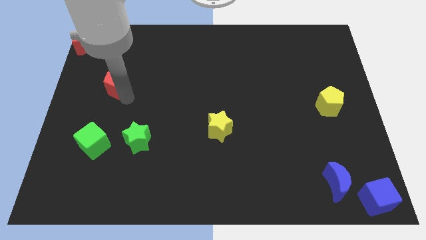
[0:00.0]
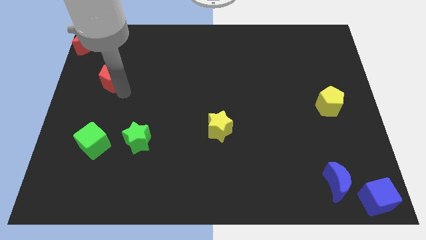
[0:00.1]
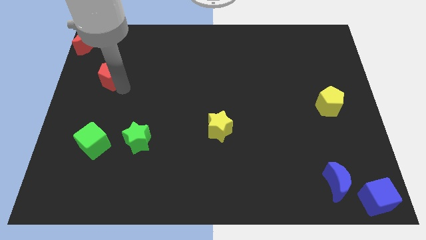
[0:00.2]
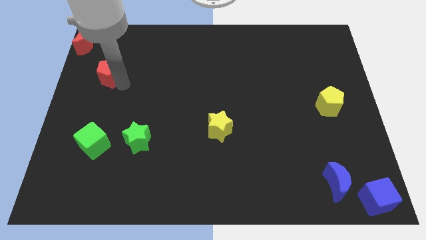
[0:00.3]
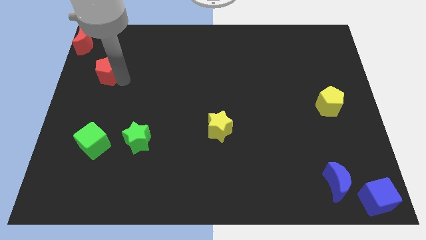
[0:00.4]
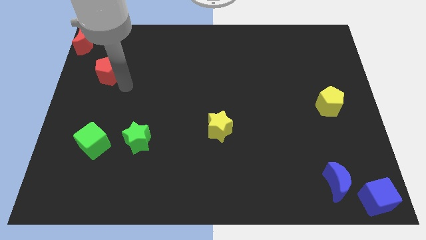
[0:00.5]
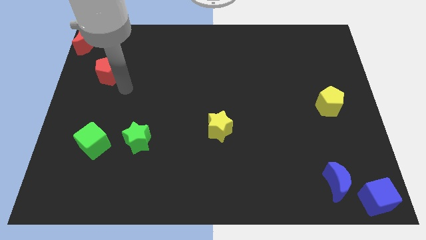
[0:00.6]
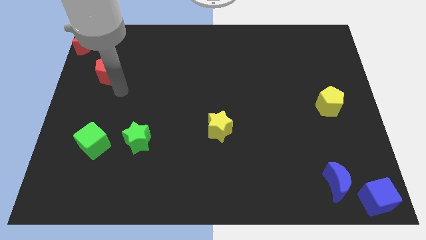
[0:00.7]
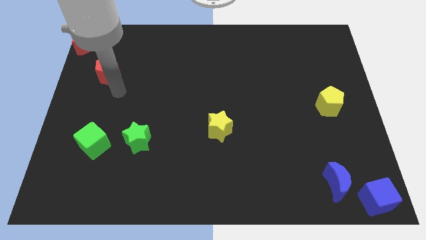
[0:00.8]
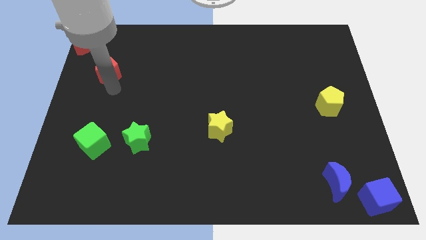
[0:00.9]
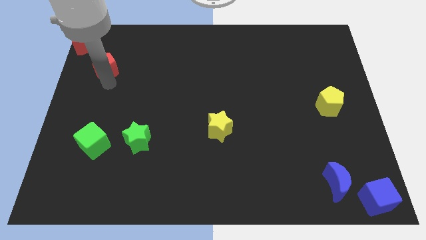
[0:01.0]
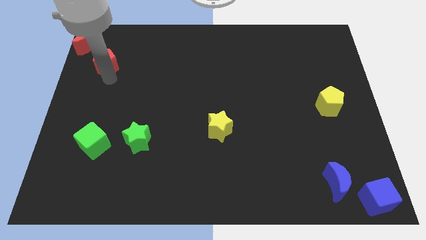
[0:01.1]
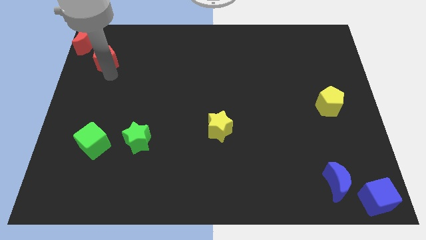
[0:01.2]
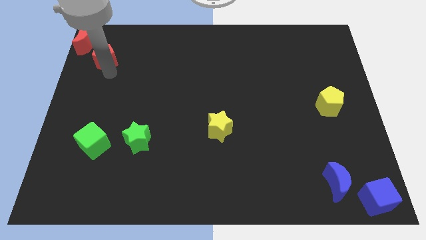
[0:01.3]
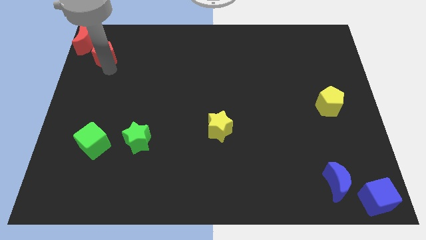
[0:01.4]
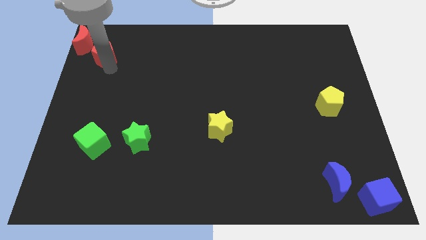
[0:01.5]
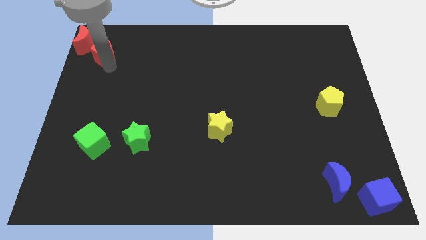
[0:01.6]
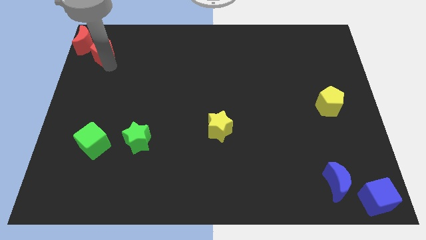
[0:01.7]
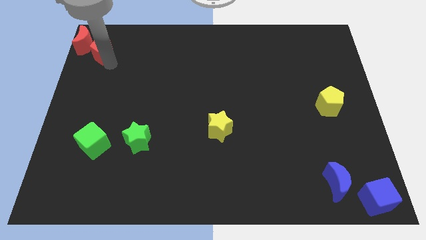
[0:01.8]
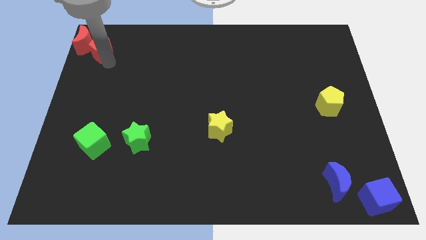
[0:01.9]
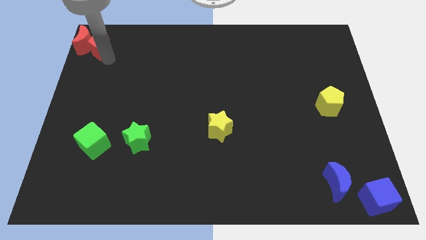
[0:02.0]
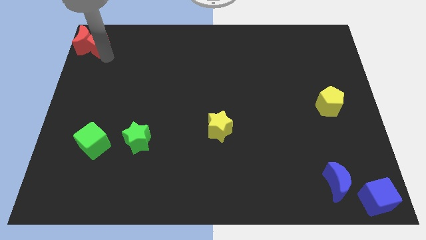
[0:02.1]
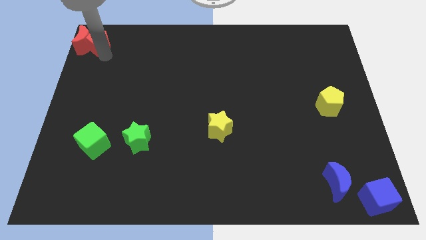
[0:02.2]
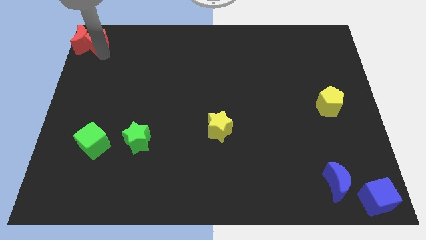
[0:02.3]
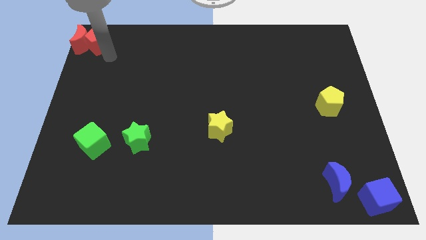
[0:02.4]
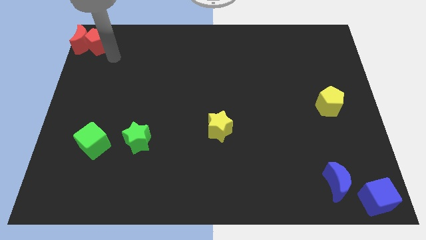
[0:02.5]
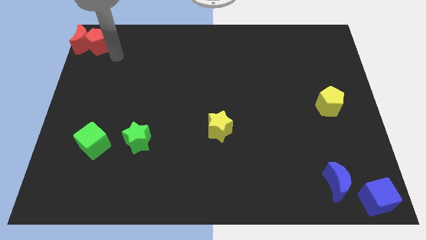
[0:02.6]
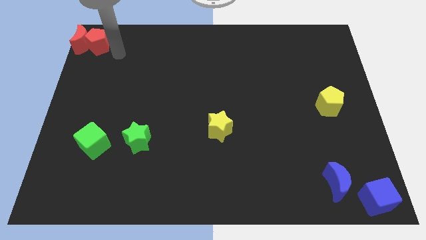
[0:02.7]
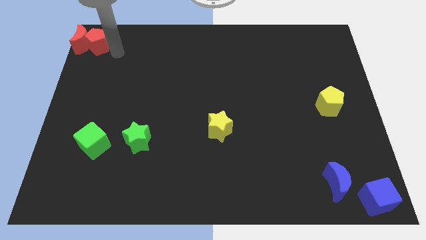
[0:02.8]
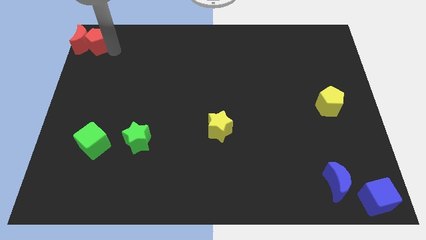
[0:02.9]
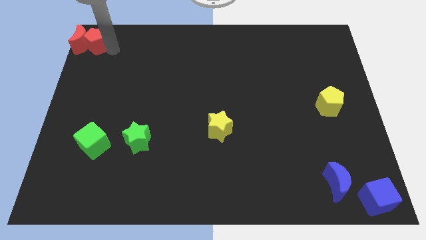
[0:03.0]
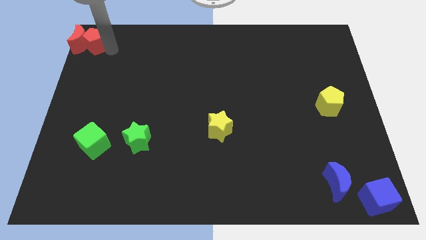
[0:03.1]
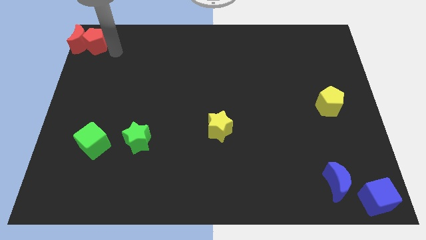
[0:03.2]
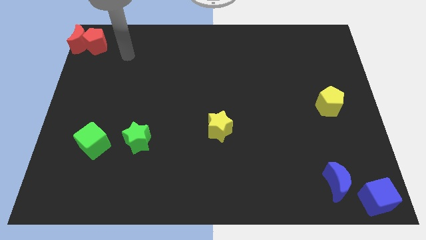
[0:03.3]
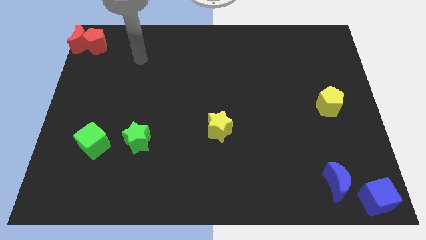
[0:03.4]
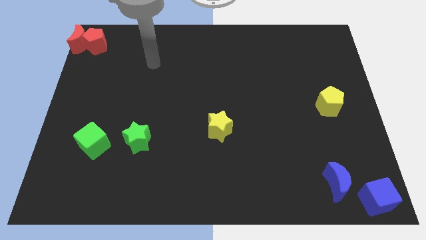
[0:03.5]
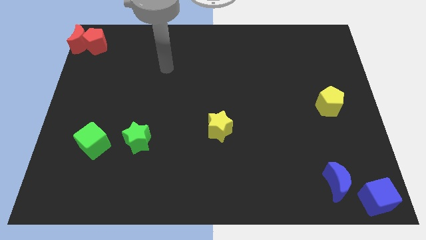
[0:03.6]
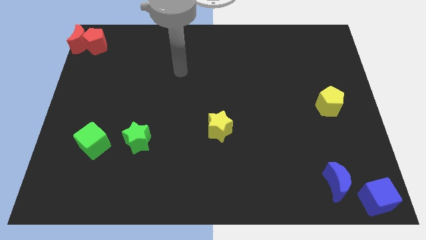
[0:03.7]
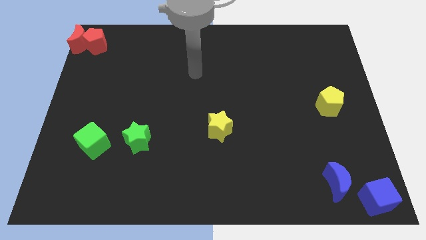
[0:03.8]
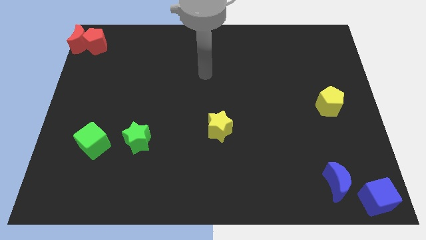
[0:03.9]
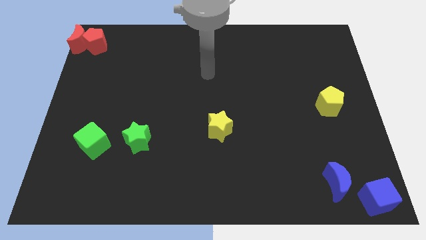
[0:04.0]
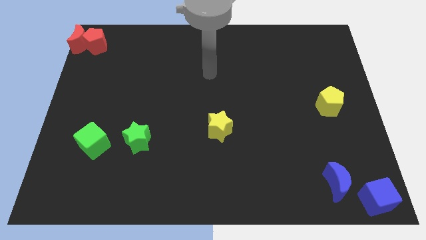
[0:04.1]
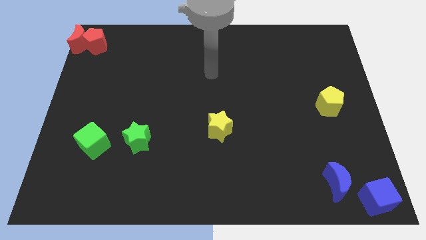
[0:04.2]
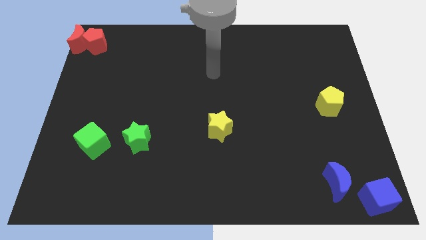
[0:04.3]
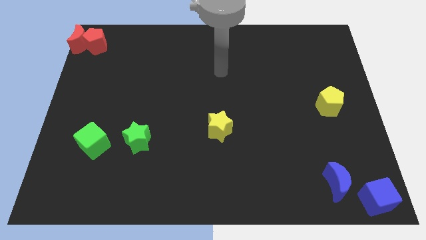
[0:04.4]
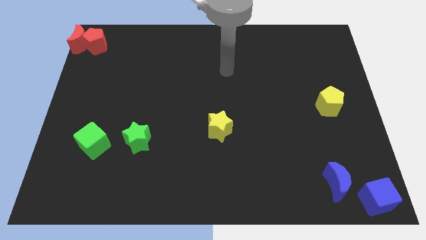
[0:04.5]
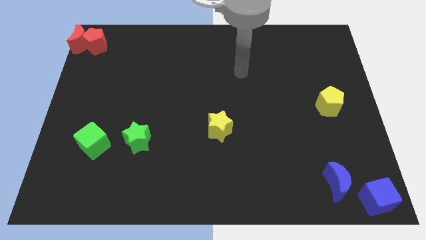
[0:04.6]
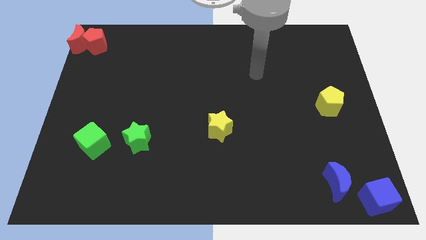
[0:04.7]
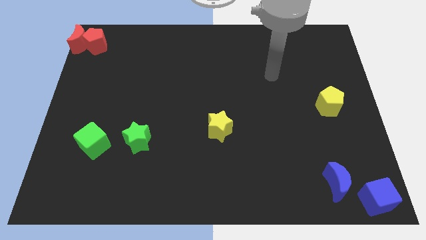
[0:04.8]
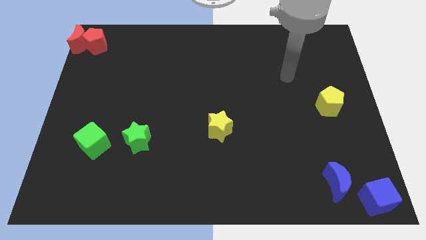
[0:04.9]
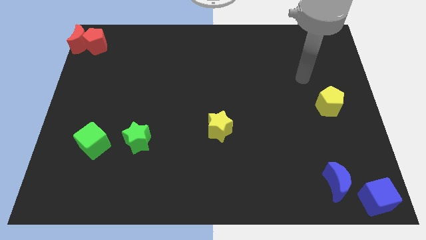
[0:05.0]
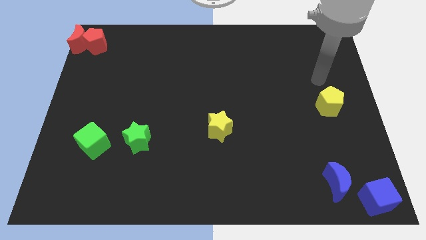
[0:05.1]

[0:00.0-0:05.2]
push the red pentagon close to the red crescent

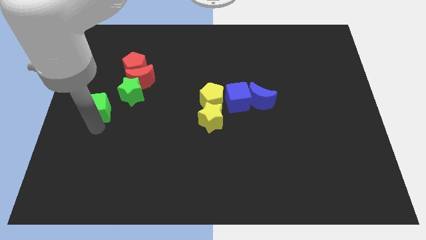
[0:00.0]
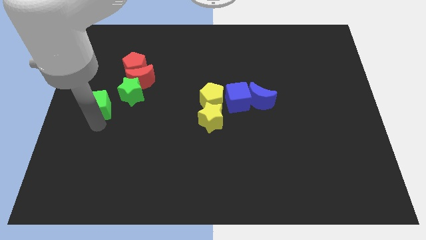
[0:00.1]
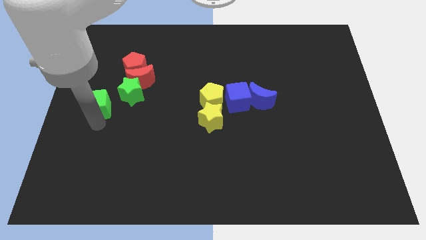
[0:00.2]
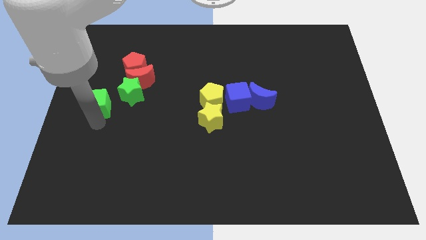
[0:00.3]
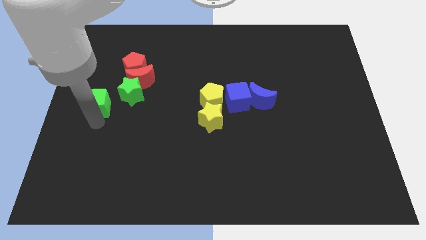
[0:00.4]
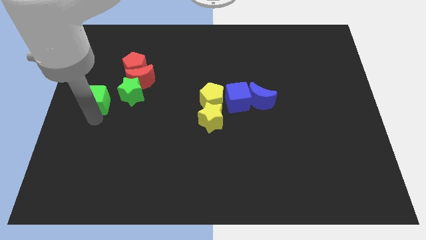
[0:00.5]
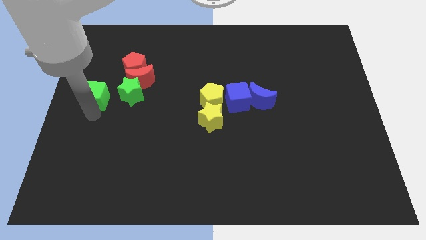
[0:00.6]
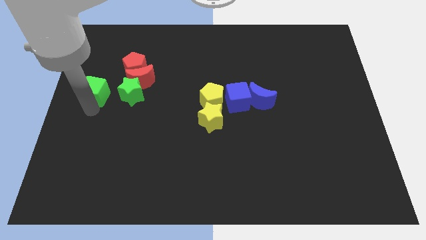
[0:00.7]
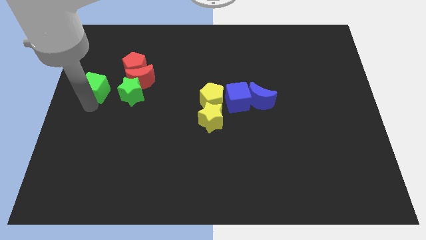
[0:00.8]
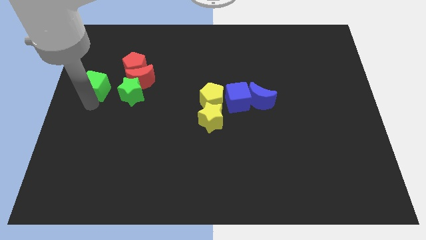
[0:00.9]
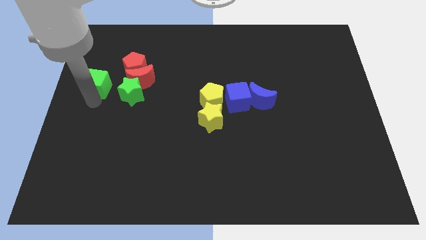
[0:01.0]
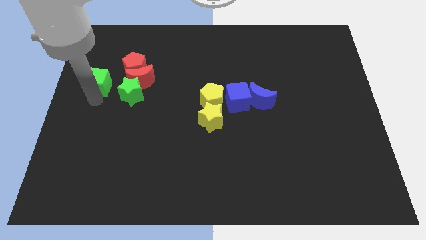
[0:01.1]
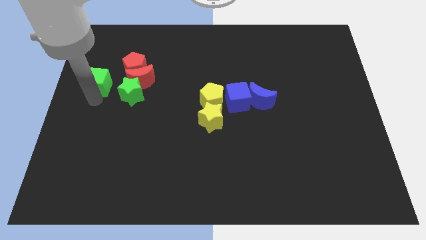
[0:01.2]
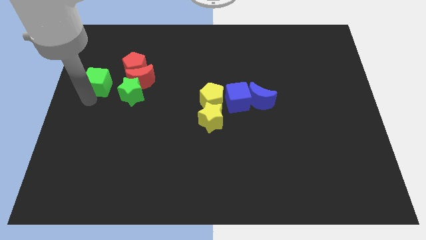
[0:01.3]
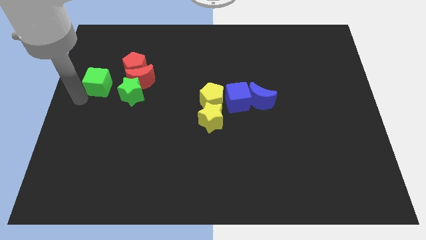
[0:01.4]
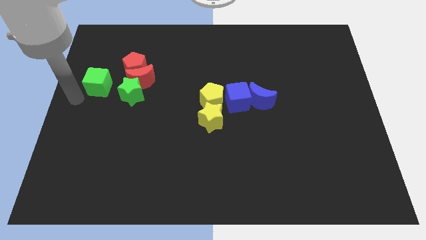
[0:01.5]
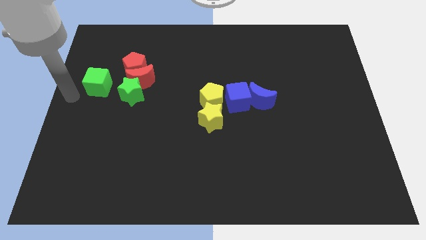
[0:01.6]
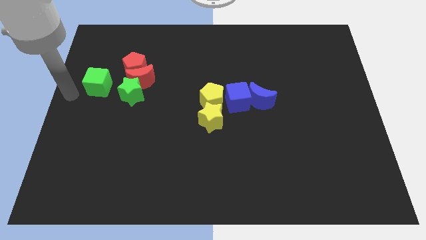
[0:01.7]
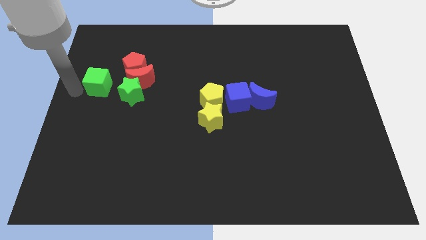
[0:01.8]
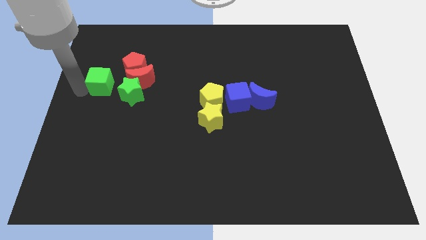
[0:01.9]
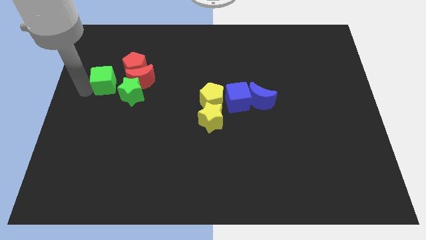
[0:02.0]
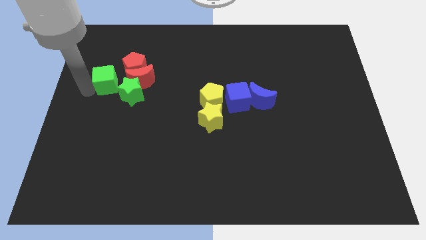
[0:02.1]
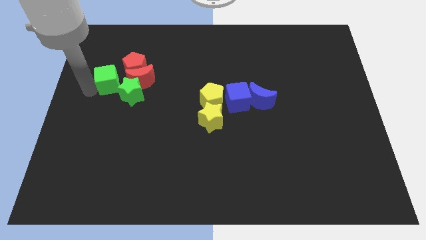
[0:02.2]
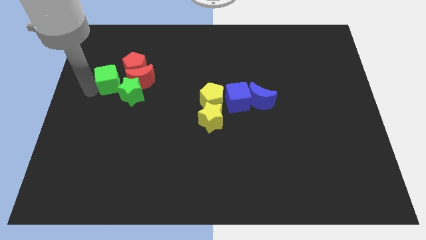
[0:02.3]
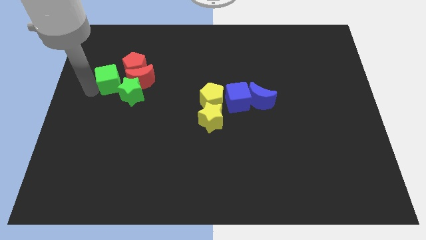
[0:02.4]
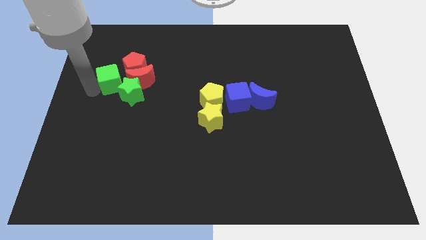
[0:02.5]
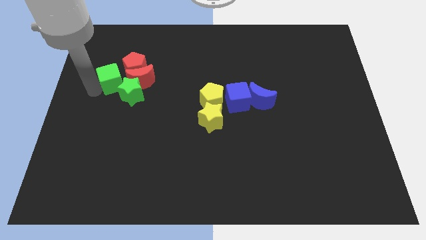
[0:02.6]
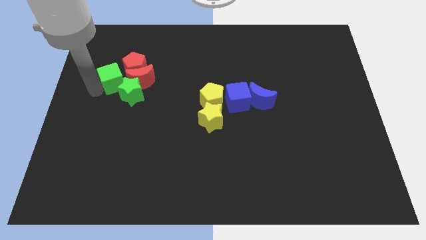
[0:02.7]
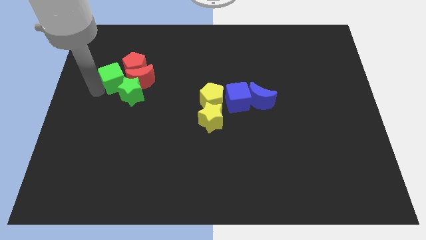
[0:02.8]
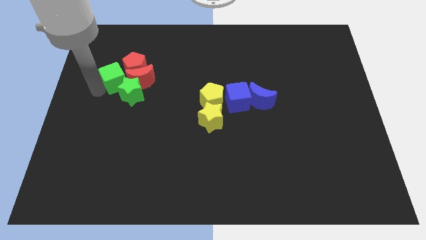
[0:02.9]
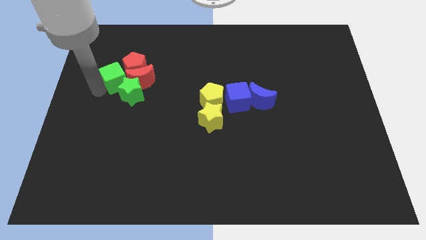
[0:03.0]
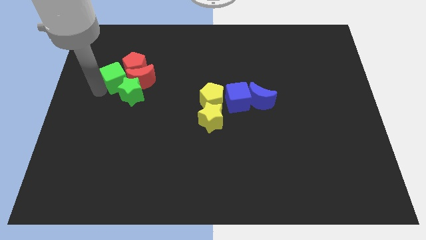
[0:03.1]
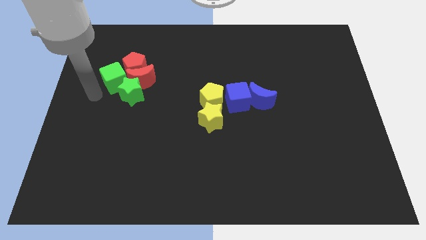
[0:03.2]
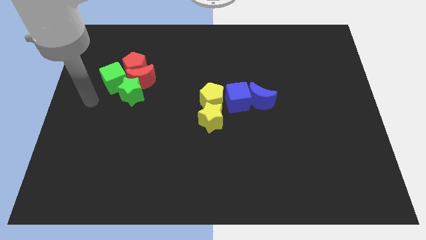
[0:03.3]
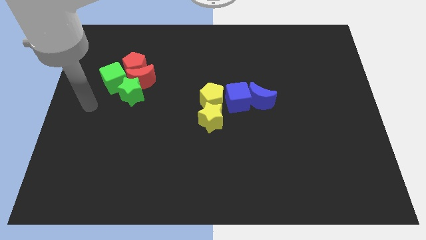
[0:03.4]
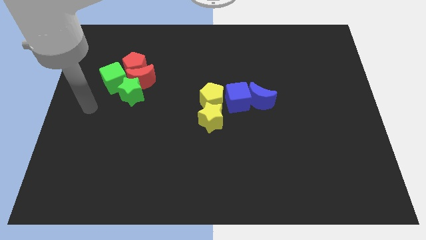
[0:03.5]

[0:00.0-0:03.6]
move the green cube into the red moon

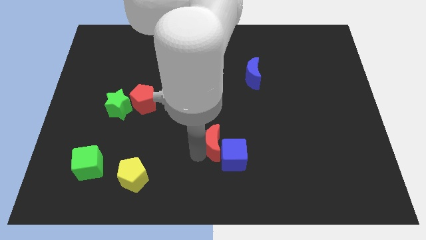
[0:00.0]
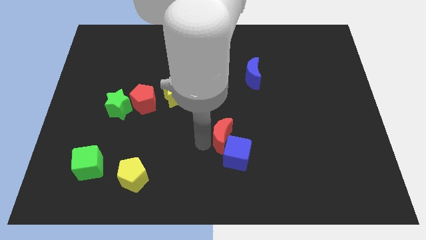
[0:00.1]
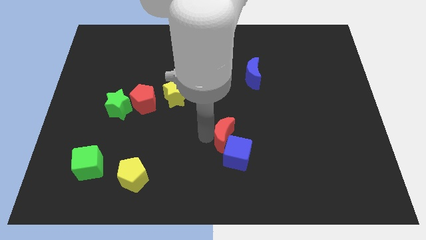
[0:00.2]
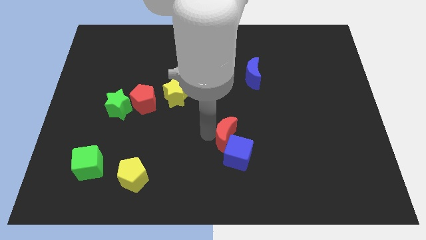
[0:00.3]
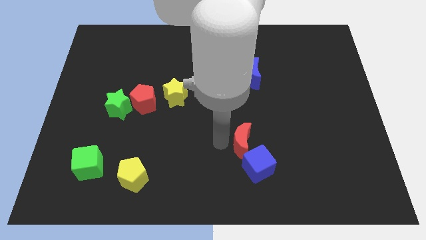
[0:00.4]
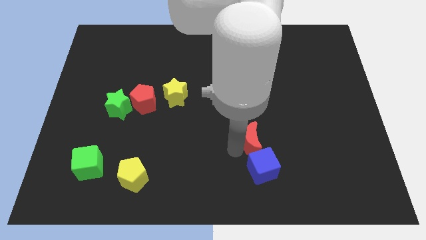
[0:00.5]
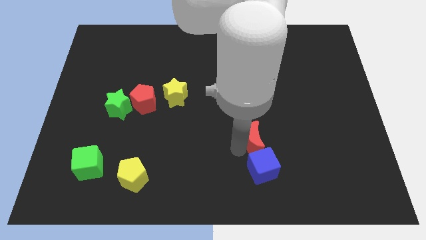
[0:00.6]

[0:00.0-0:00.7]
place the red crescent above the blue cube
